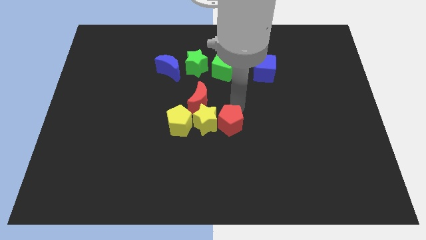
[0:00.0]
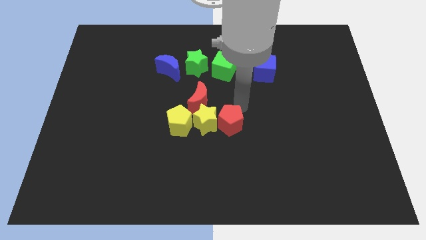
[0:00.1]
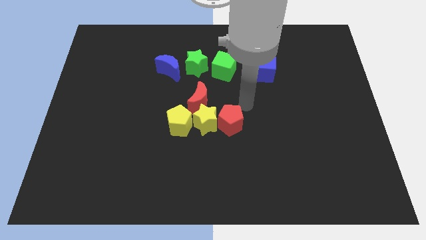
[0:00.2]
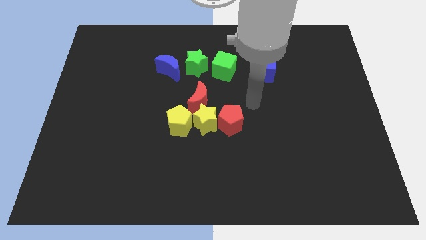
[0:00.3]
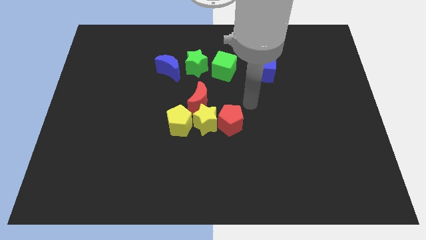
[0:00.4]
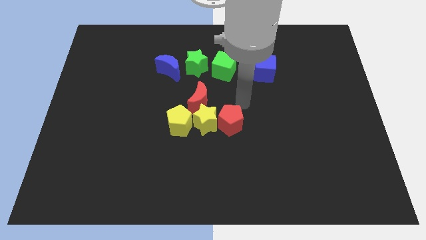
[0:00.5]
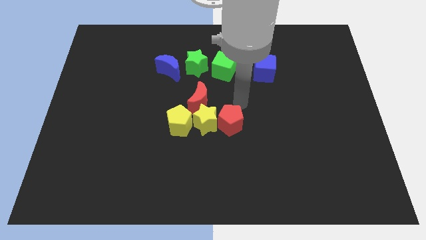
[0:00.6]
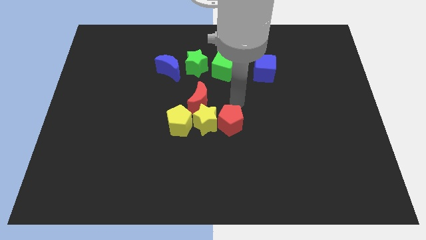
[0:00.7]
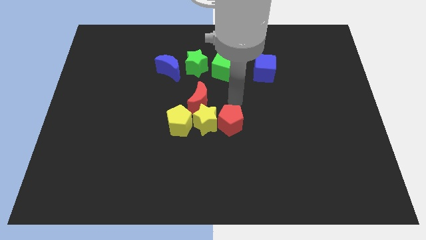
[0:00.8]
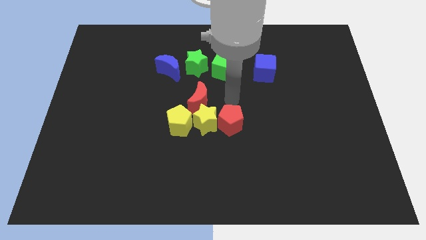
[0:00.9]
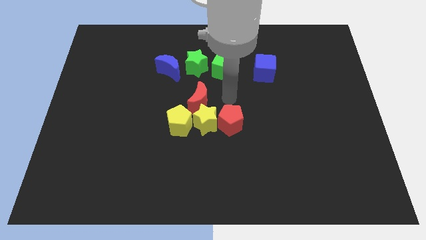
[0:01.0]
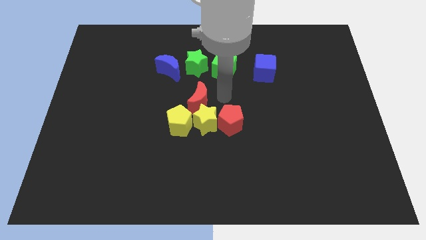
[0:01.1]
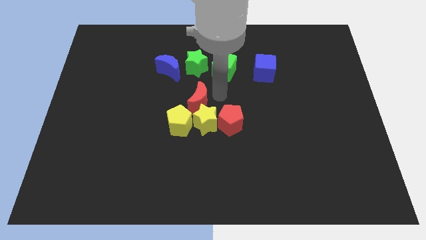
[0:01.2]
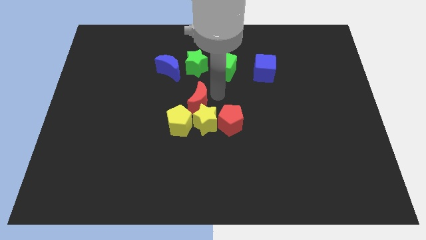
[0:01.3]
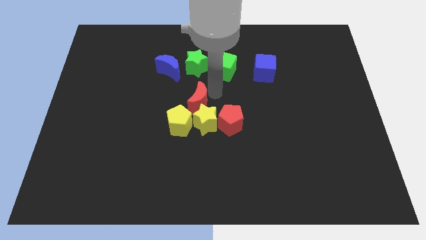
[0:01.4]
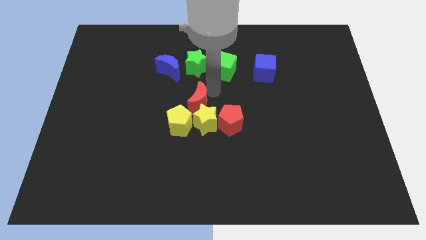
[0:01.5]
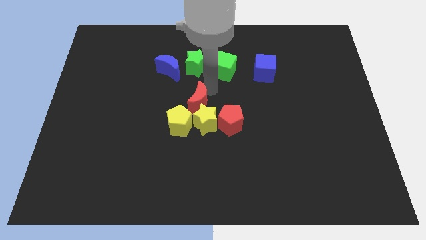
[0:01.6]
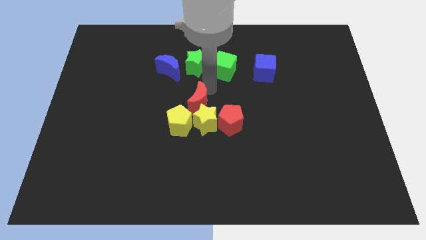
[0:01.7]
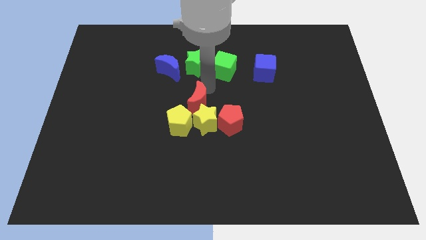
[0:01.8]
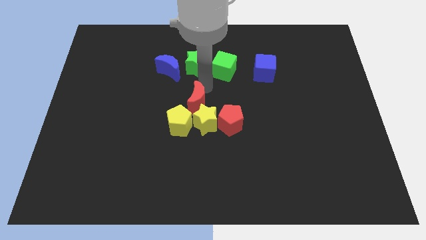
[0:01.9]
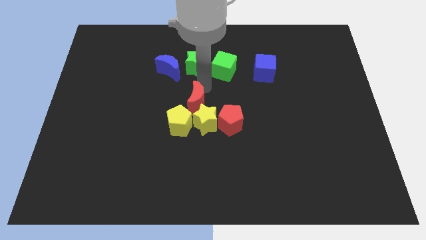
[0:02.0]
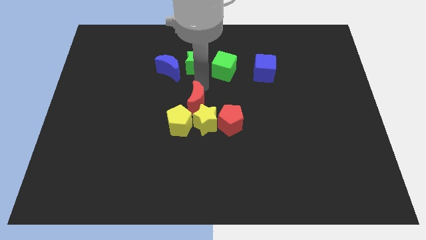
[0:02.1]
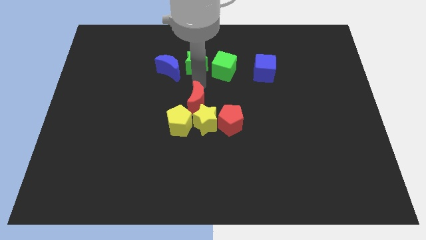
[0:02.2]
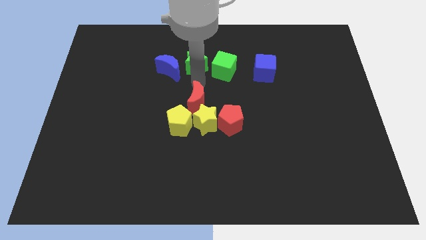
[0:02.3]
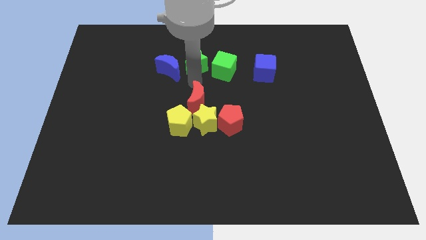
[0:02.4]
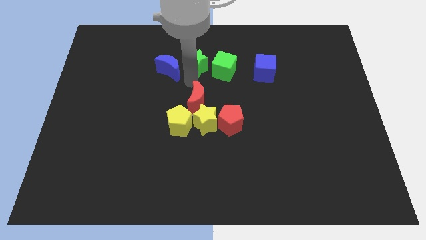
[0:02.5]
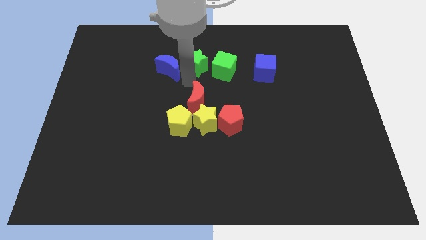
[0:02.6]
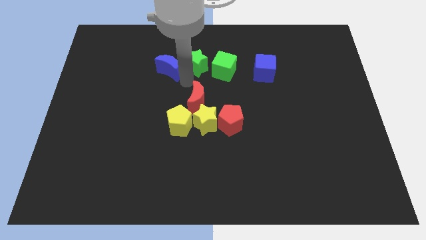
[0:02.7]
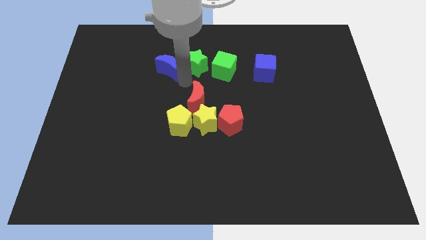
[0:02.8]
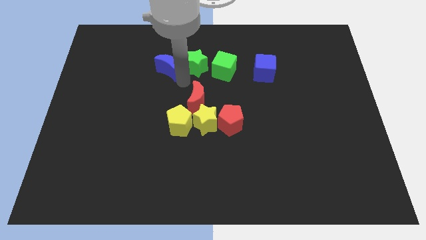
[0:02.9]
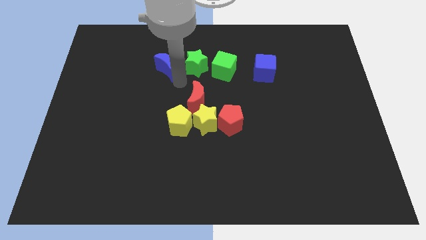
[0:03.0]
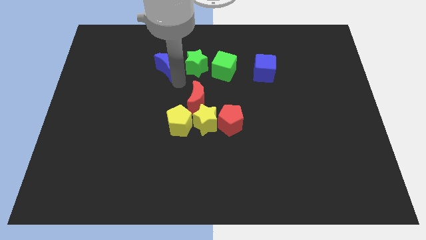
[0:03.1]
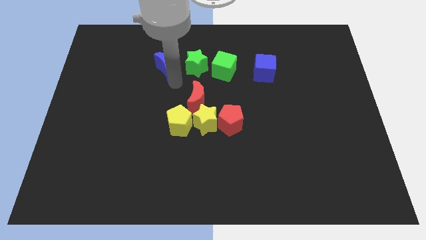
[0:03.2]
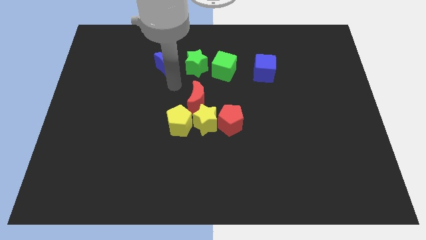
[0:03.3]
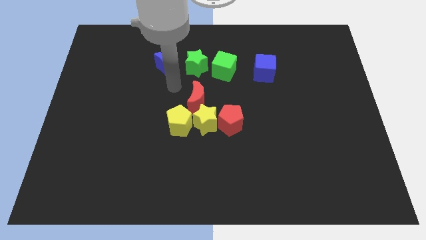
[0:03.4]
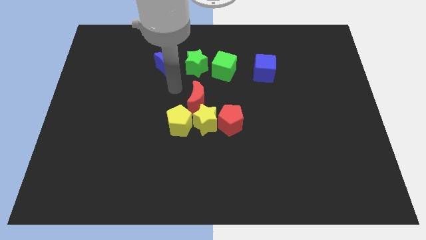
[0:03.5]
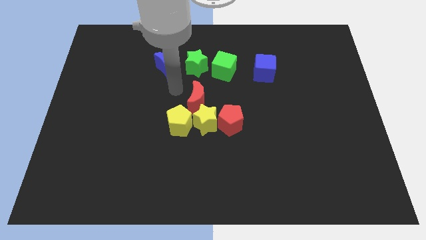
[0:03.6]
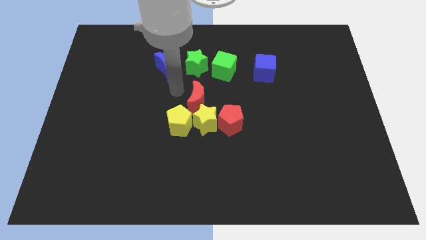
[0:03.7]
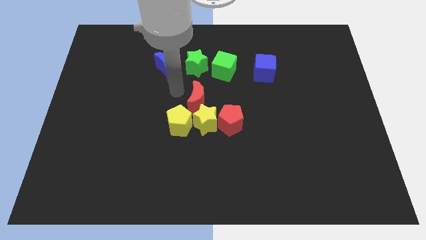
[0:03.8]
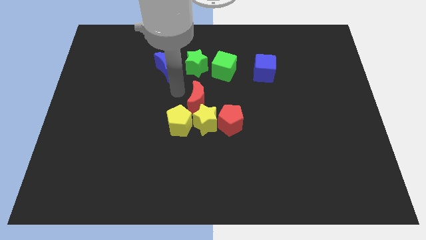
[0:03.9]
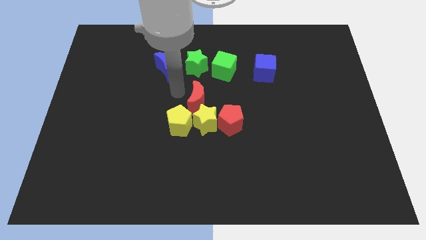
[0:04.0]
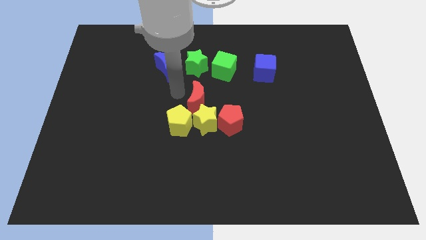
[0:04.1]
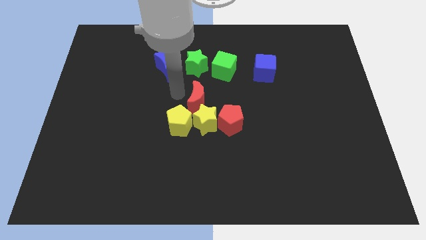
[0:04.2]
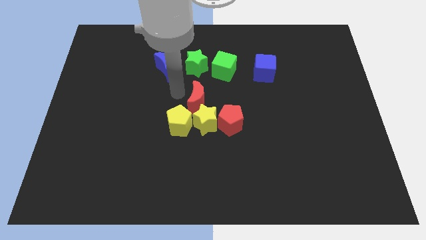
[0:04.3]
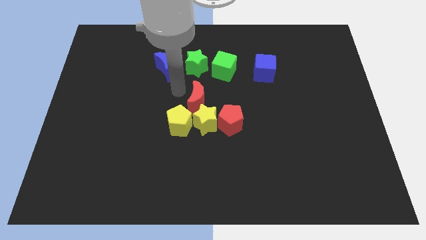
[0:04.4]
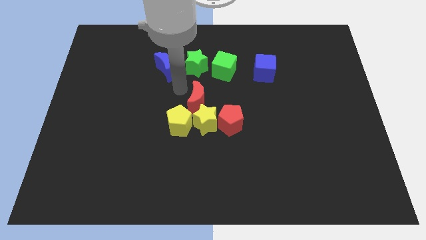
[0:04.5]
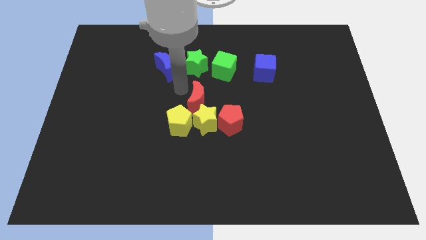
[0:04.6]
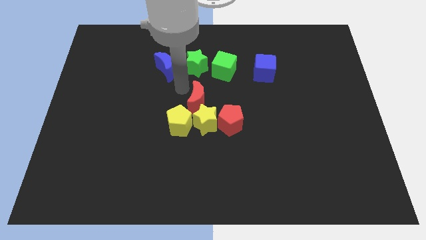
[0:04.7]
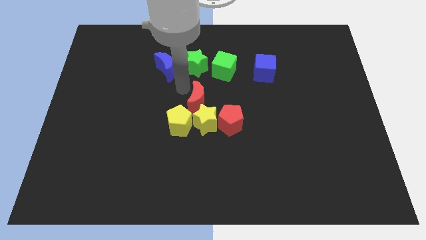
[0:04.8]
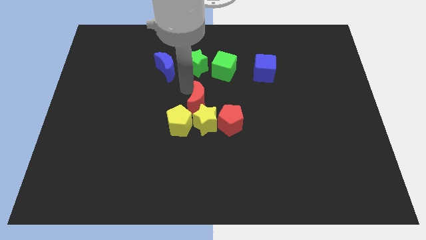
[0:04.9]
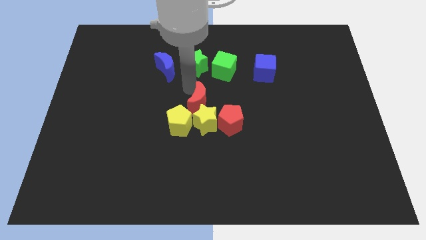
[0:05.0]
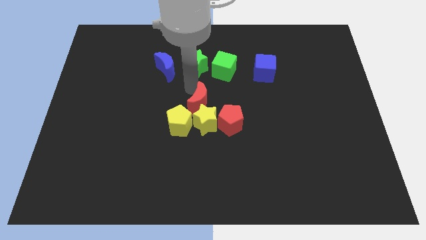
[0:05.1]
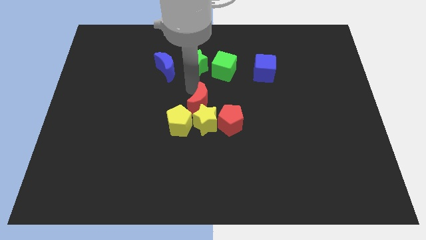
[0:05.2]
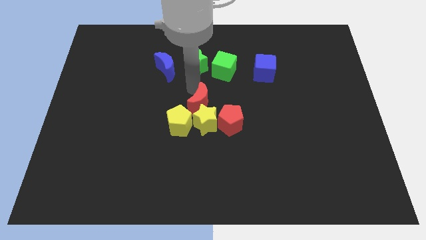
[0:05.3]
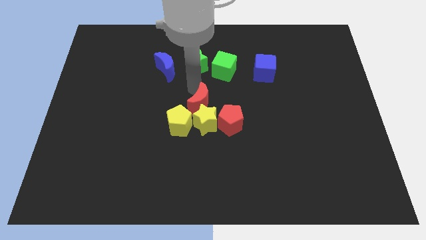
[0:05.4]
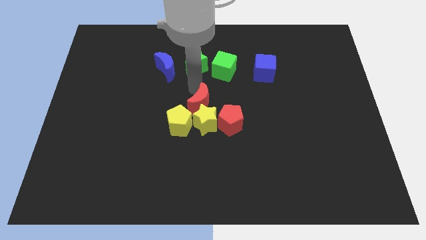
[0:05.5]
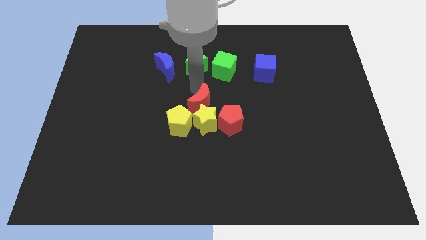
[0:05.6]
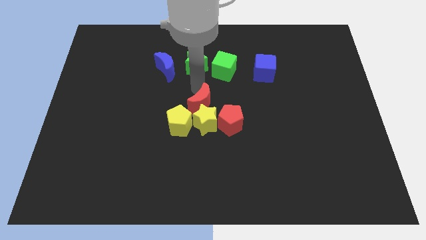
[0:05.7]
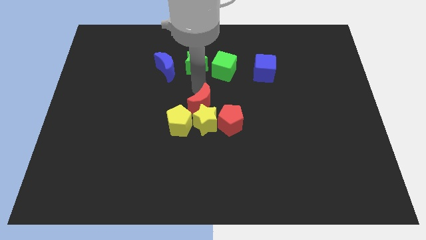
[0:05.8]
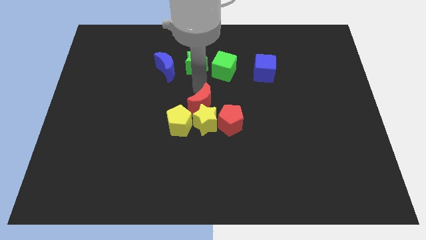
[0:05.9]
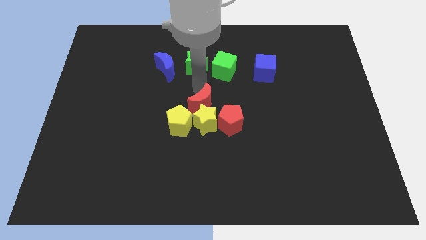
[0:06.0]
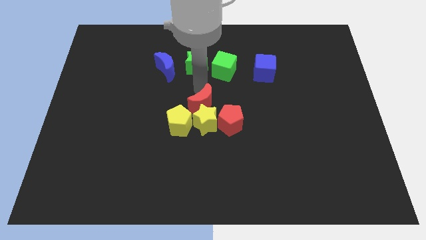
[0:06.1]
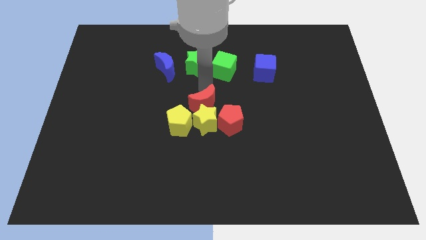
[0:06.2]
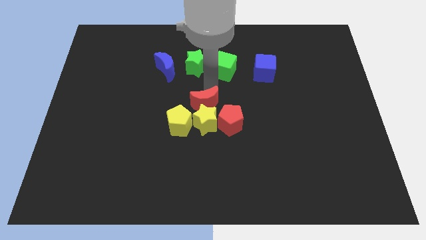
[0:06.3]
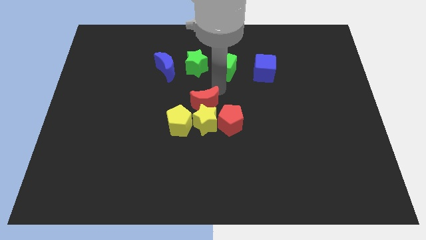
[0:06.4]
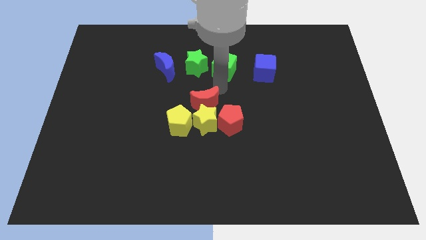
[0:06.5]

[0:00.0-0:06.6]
place the red crescent above the yellow star

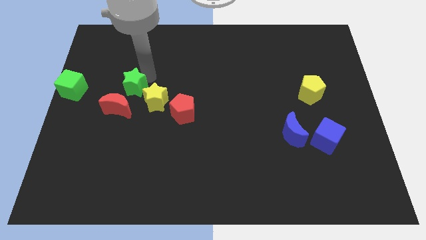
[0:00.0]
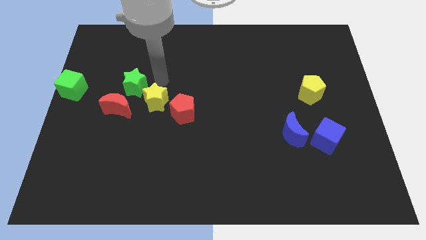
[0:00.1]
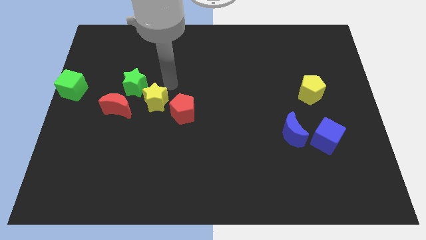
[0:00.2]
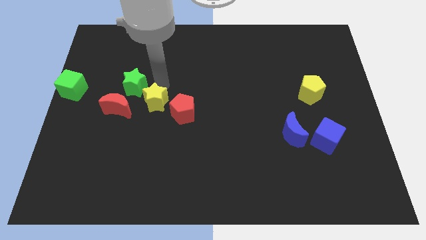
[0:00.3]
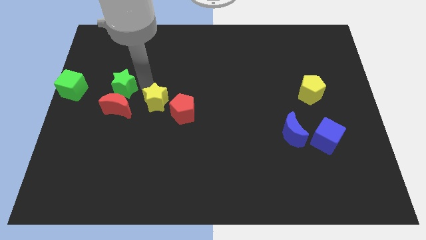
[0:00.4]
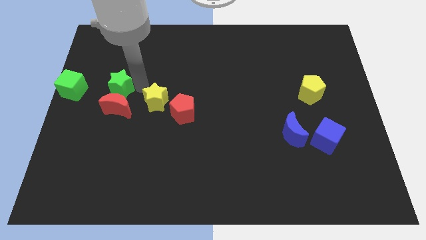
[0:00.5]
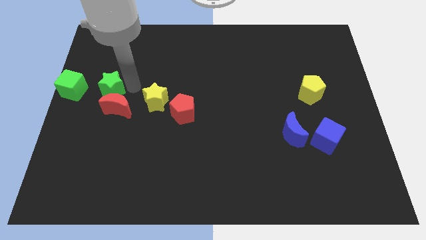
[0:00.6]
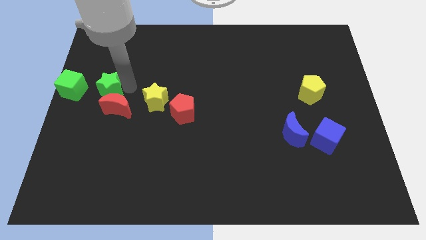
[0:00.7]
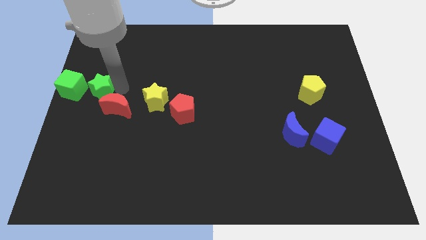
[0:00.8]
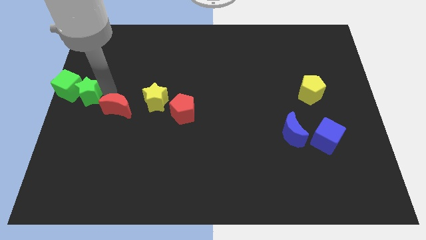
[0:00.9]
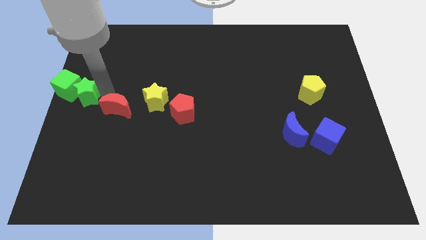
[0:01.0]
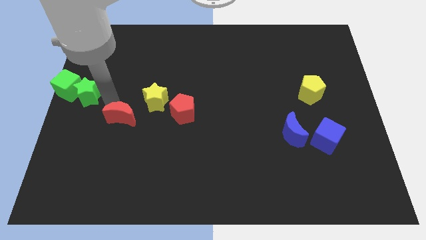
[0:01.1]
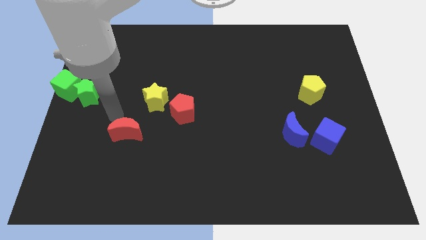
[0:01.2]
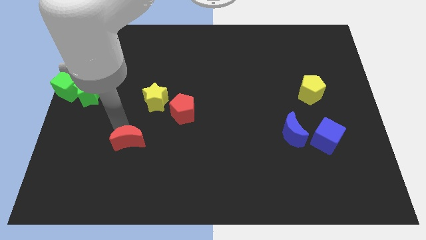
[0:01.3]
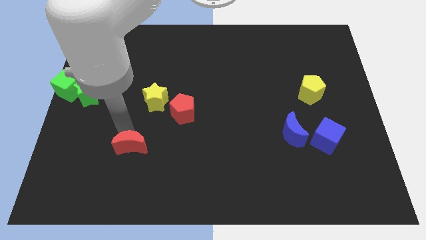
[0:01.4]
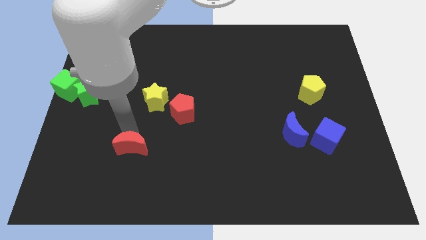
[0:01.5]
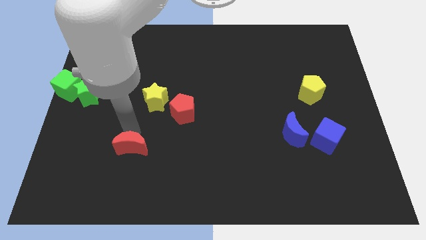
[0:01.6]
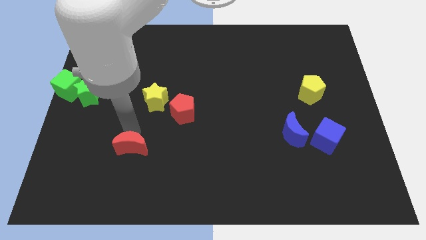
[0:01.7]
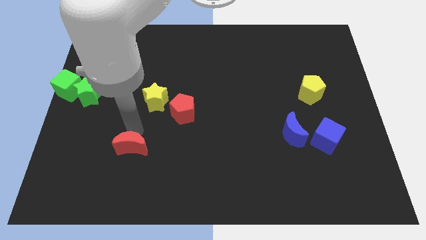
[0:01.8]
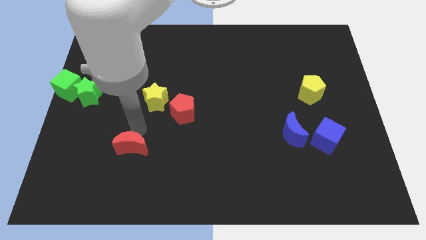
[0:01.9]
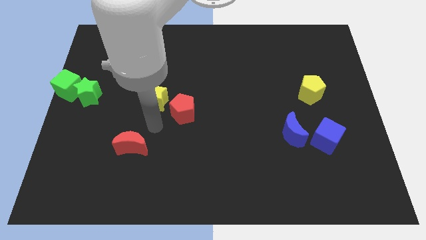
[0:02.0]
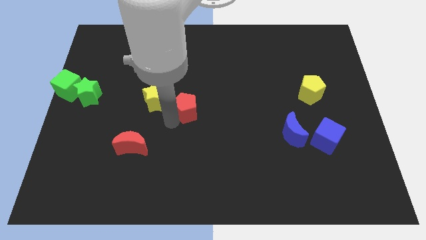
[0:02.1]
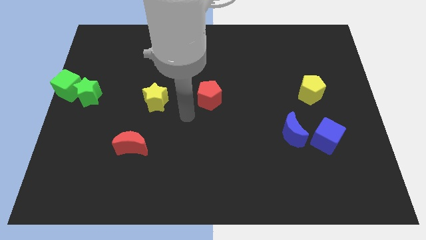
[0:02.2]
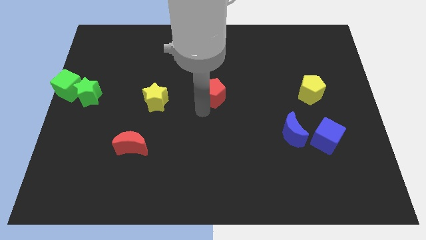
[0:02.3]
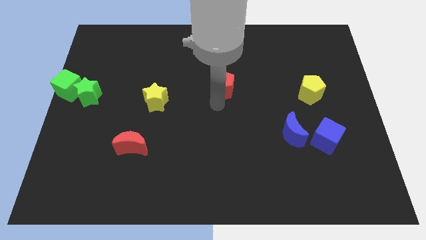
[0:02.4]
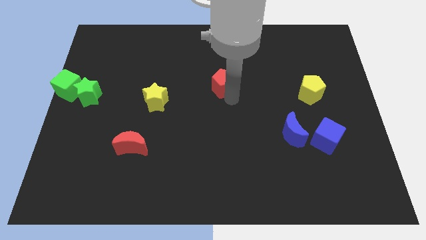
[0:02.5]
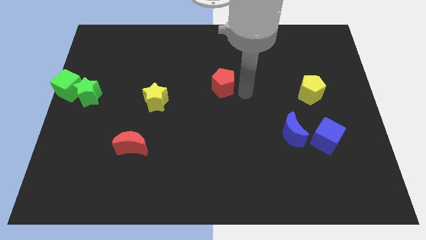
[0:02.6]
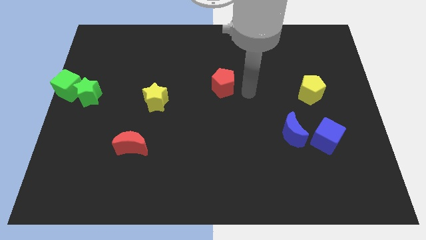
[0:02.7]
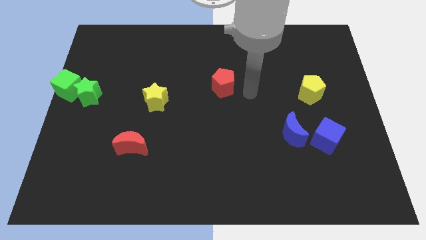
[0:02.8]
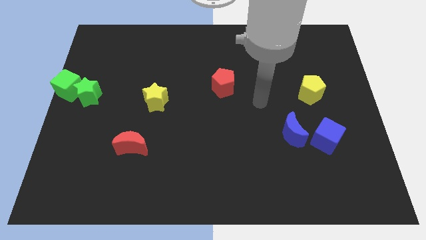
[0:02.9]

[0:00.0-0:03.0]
push the green star into the green cube
